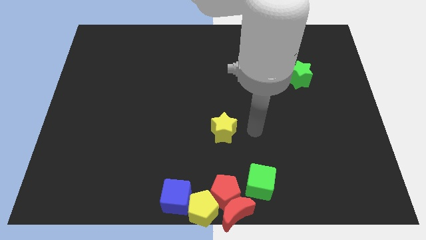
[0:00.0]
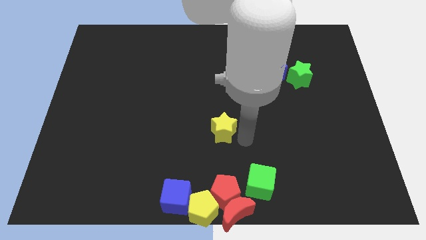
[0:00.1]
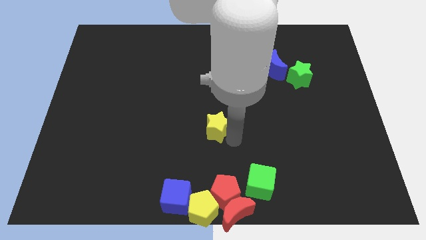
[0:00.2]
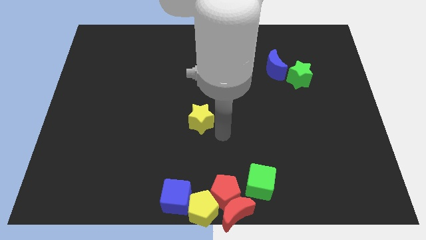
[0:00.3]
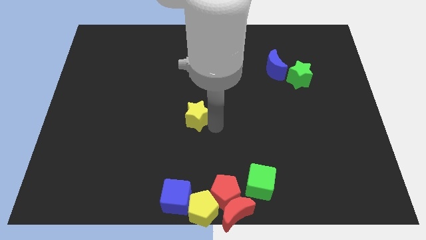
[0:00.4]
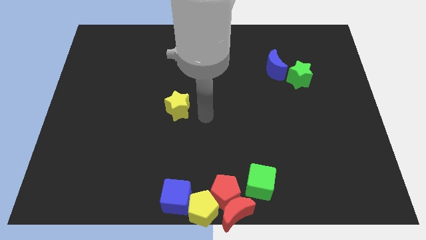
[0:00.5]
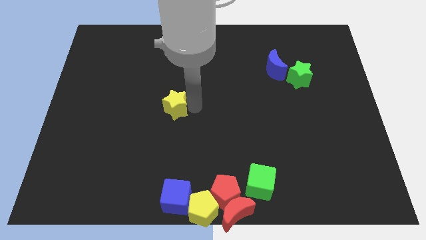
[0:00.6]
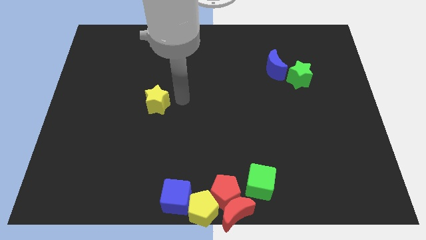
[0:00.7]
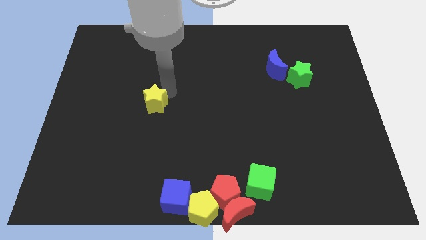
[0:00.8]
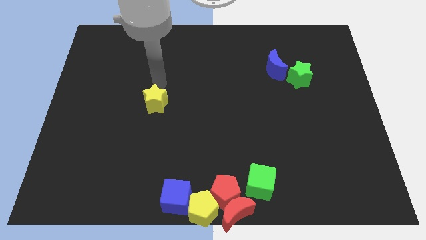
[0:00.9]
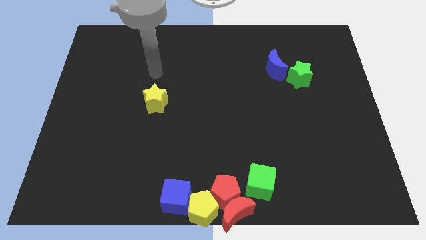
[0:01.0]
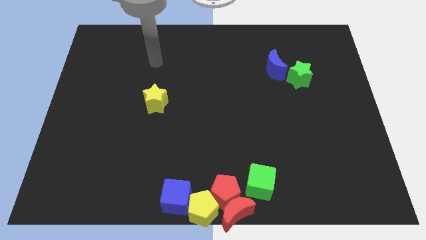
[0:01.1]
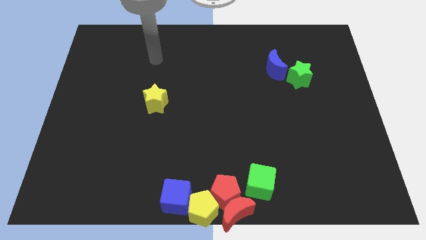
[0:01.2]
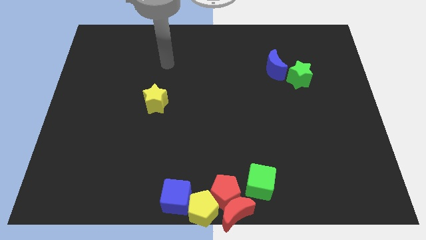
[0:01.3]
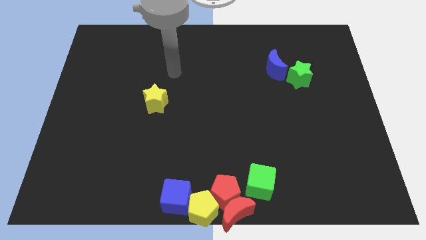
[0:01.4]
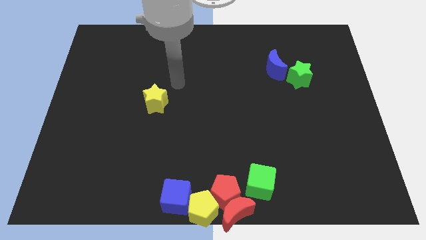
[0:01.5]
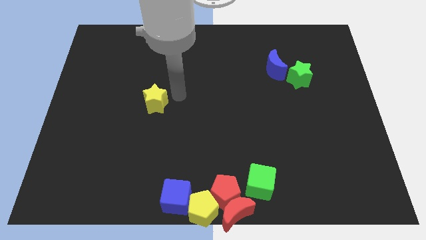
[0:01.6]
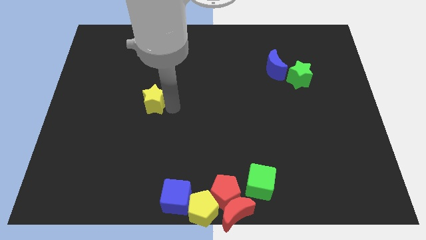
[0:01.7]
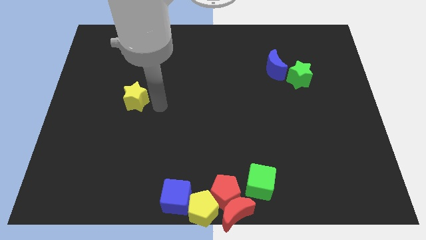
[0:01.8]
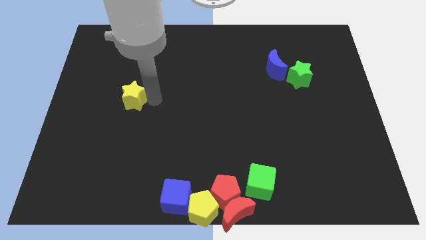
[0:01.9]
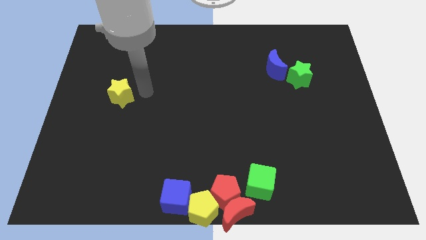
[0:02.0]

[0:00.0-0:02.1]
slide yellow star towards center left

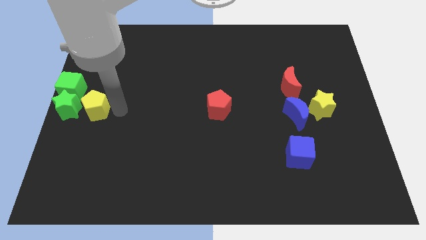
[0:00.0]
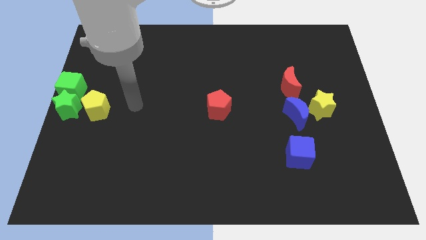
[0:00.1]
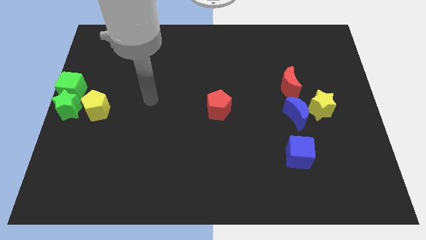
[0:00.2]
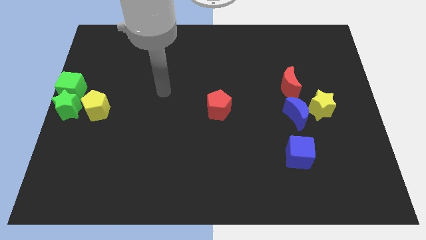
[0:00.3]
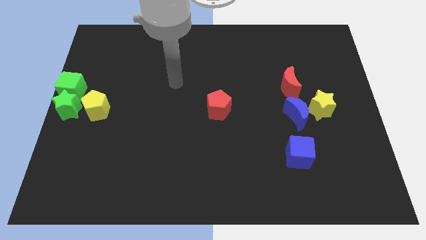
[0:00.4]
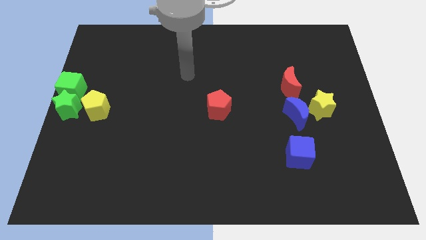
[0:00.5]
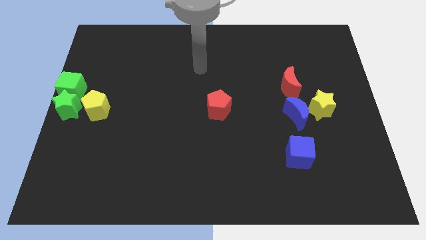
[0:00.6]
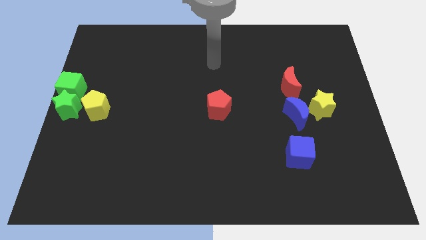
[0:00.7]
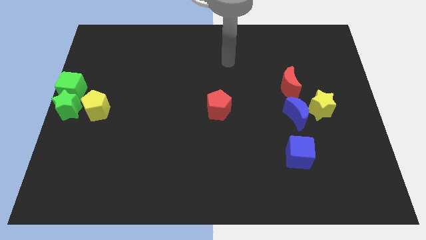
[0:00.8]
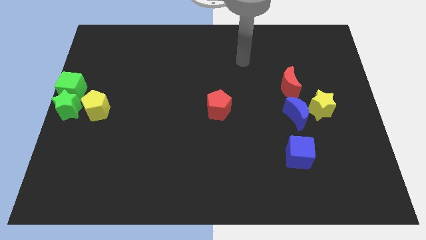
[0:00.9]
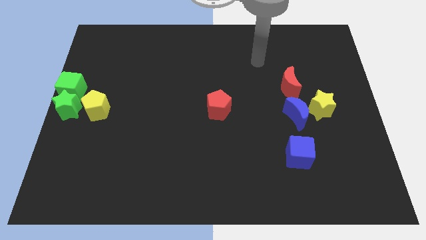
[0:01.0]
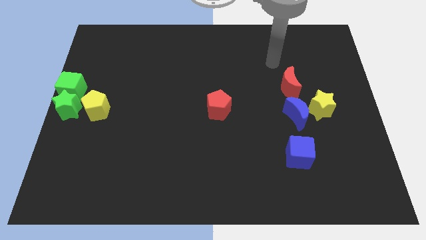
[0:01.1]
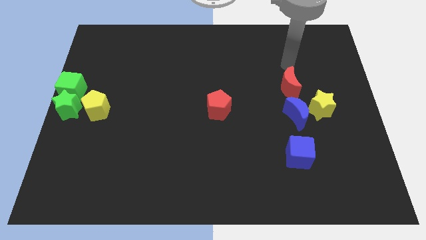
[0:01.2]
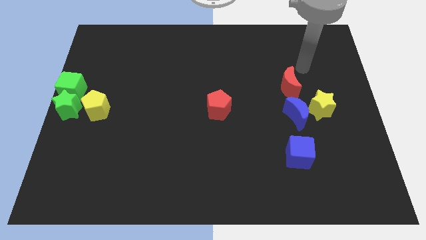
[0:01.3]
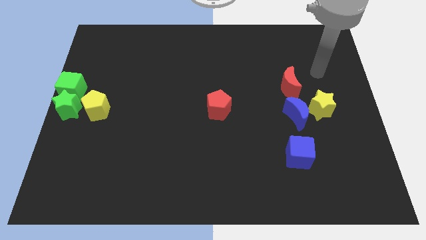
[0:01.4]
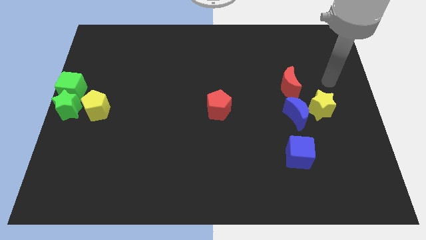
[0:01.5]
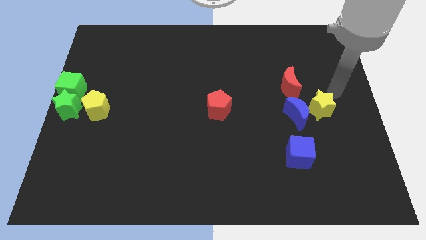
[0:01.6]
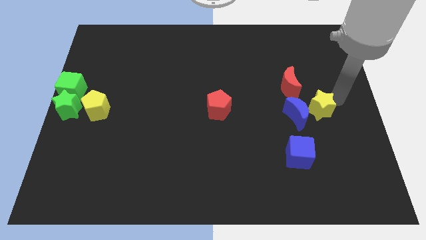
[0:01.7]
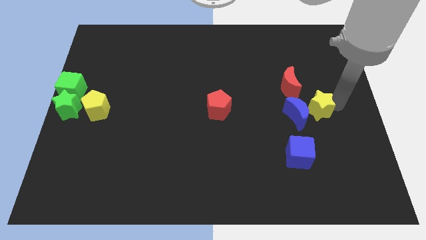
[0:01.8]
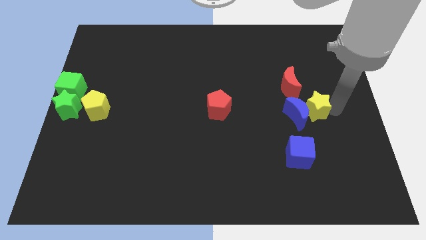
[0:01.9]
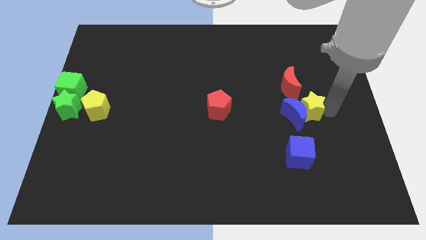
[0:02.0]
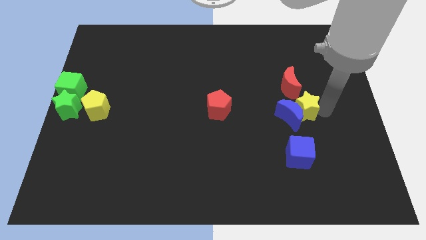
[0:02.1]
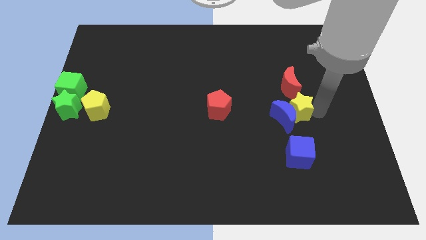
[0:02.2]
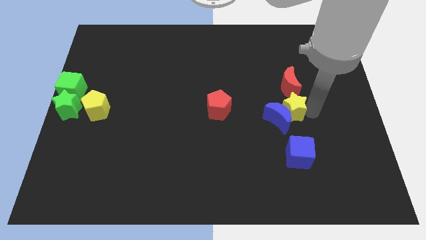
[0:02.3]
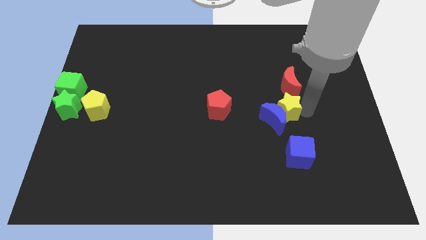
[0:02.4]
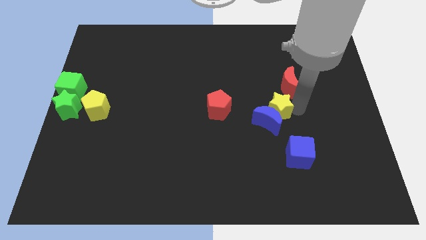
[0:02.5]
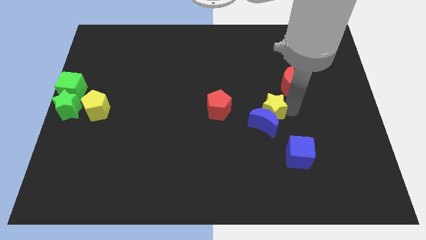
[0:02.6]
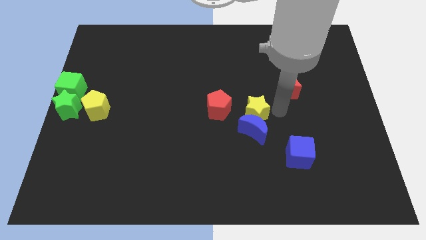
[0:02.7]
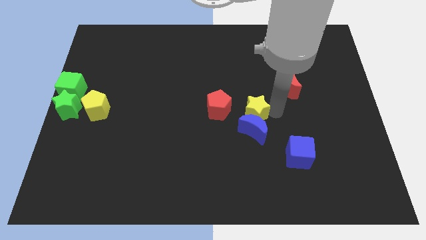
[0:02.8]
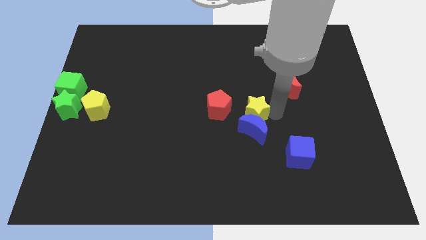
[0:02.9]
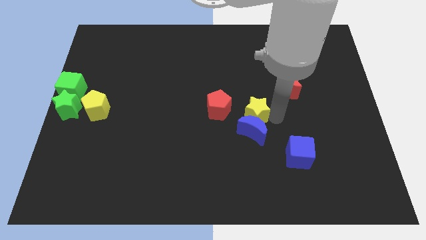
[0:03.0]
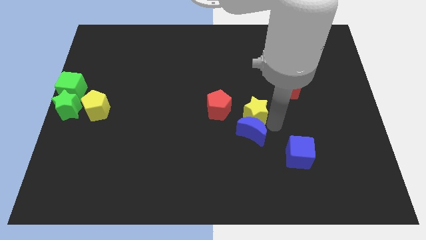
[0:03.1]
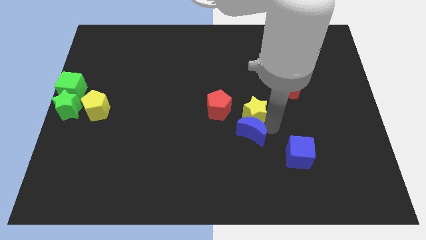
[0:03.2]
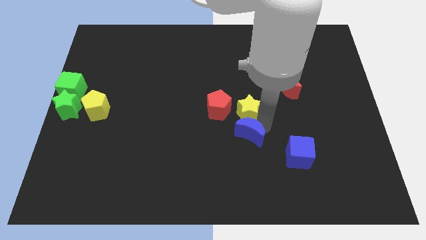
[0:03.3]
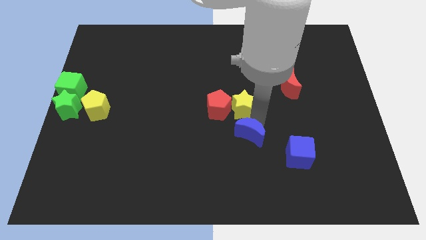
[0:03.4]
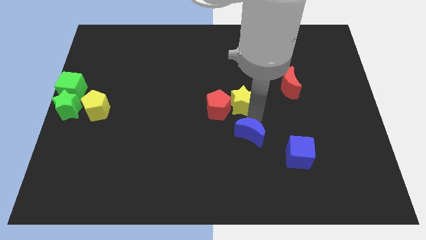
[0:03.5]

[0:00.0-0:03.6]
push the yellow star to the right side of the red pentagon

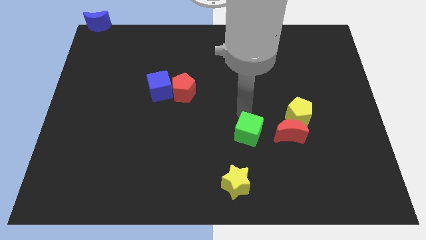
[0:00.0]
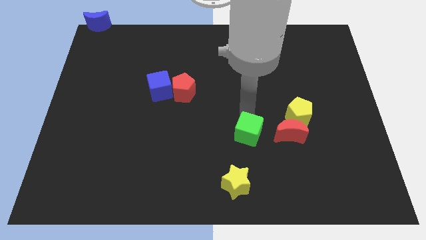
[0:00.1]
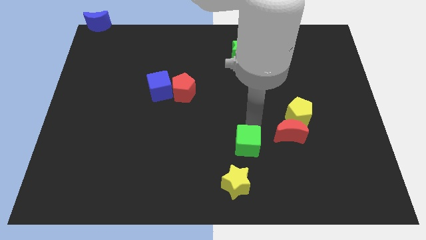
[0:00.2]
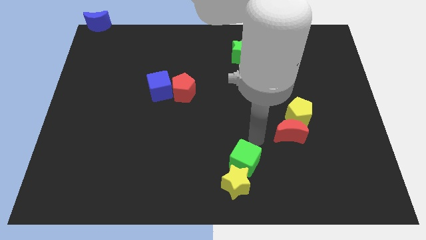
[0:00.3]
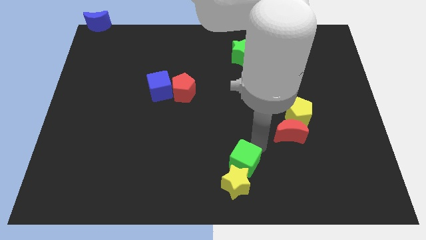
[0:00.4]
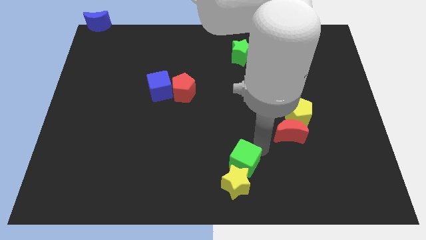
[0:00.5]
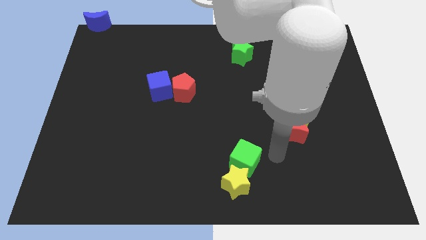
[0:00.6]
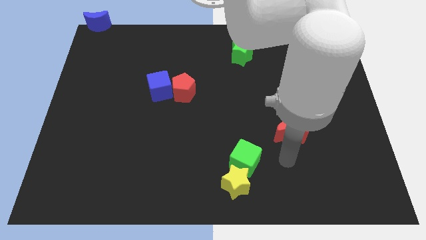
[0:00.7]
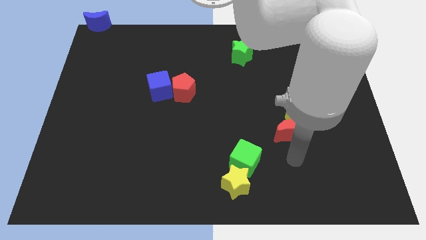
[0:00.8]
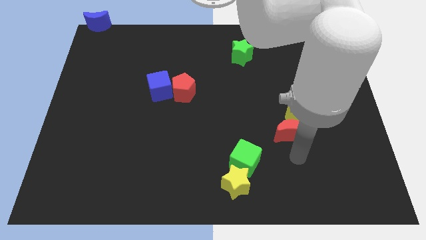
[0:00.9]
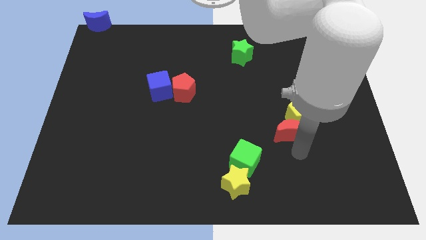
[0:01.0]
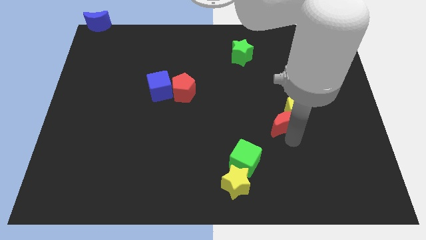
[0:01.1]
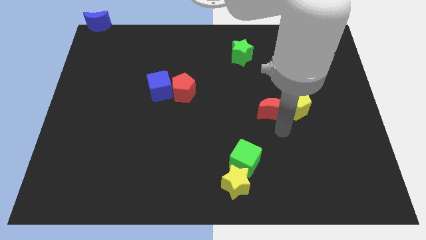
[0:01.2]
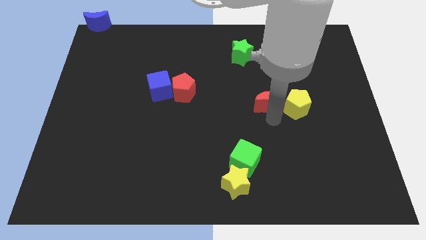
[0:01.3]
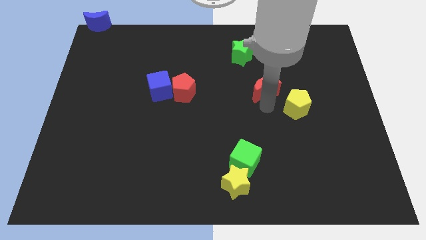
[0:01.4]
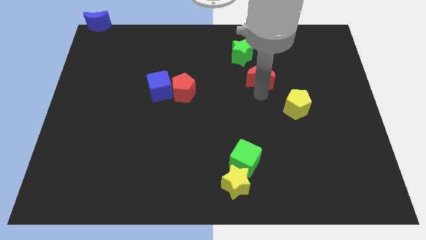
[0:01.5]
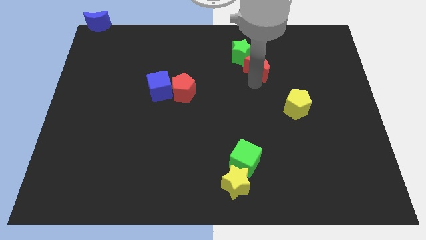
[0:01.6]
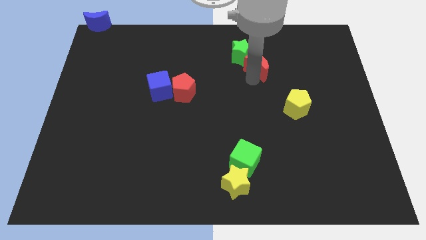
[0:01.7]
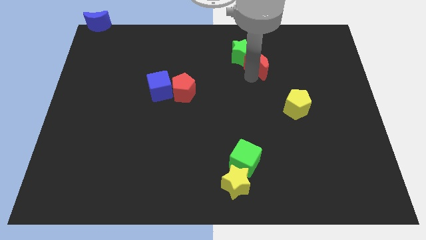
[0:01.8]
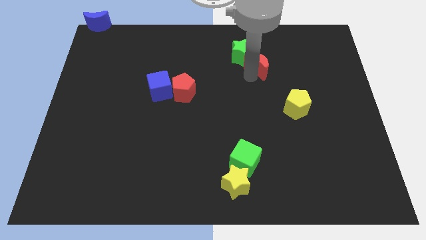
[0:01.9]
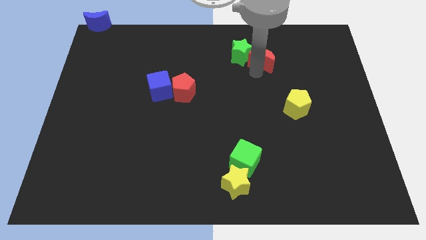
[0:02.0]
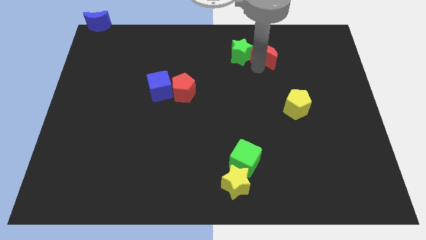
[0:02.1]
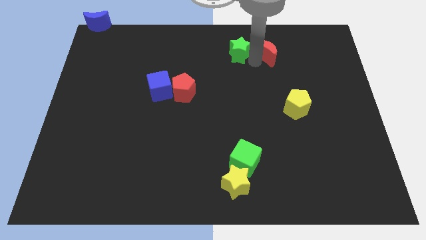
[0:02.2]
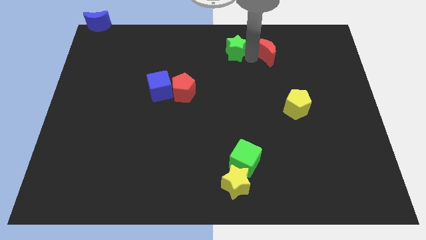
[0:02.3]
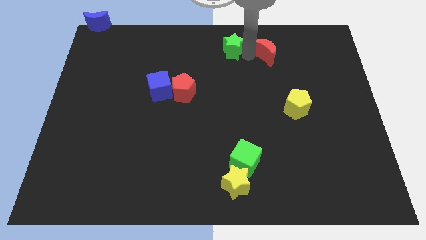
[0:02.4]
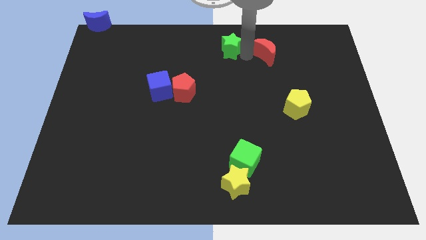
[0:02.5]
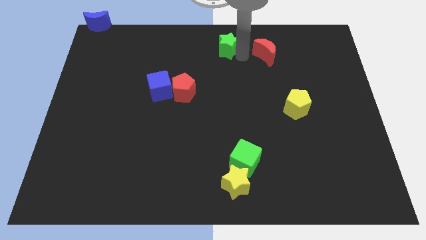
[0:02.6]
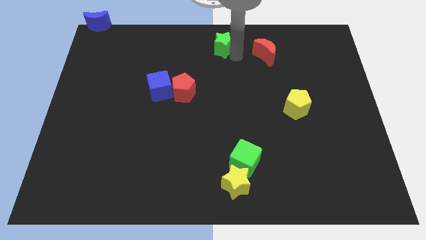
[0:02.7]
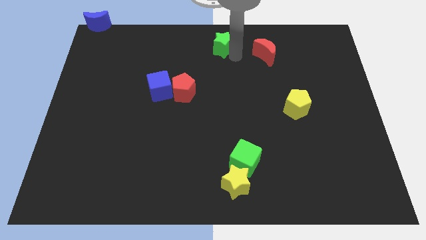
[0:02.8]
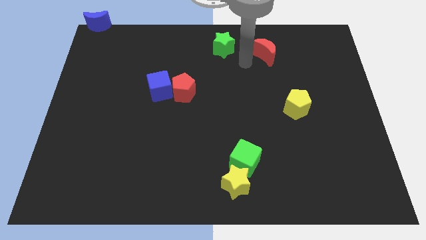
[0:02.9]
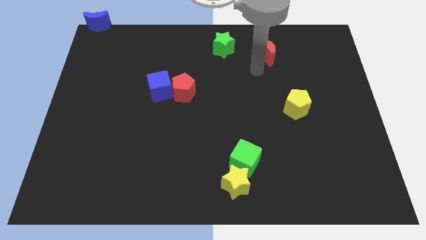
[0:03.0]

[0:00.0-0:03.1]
move the red moon into green star
